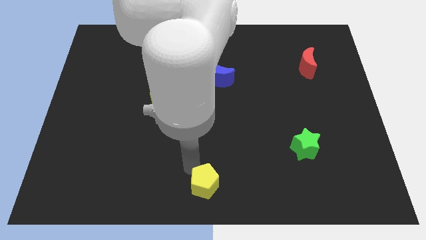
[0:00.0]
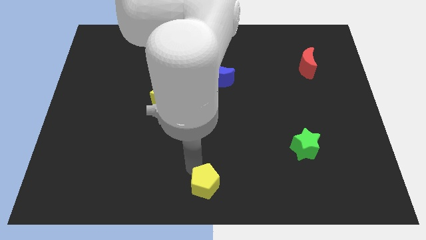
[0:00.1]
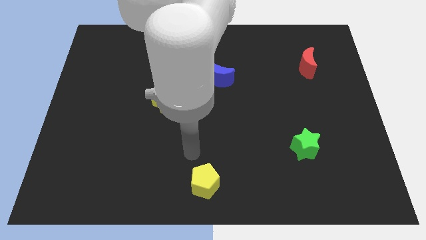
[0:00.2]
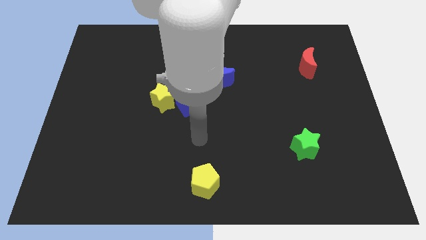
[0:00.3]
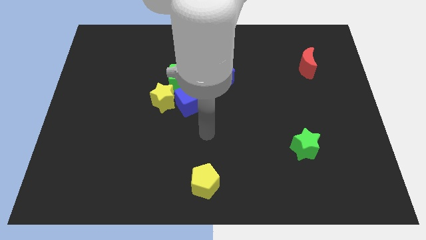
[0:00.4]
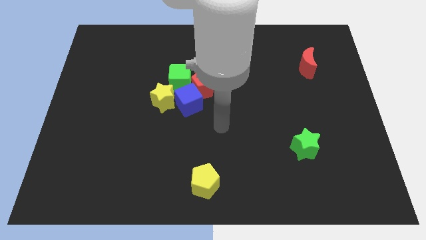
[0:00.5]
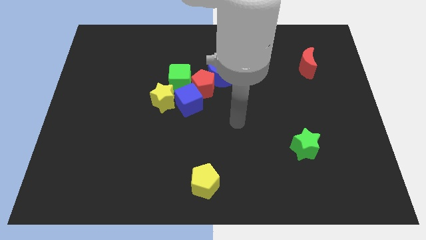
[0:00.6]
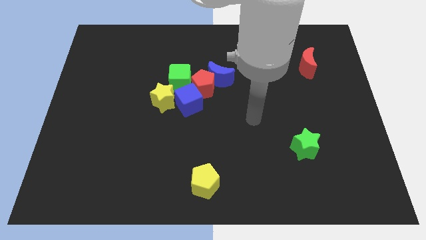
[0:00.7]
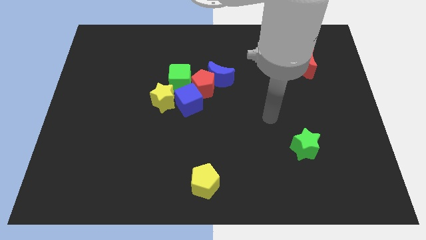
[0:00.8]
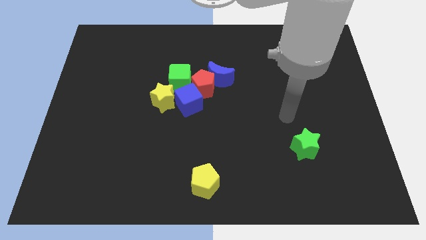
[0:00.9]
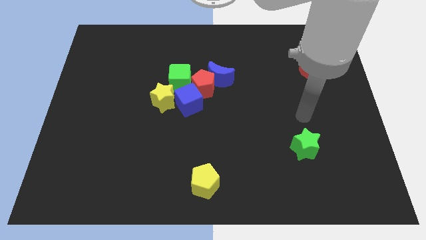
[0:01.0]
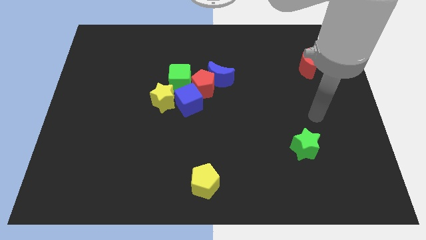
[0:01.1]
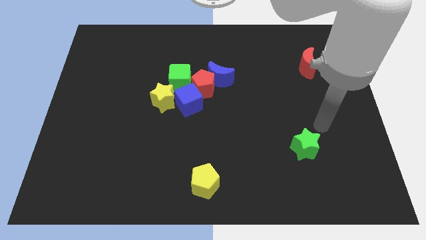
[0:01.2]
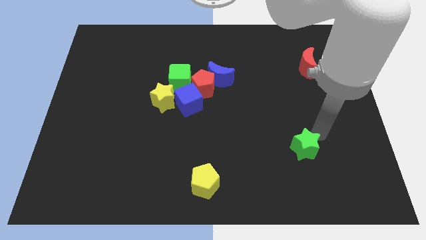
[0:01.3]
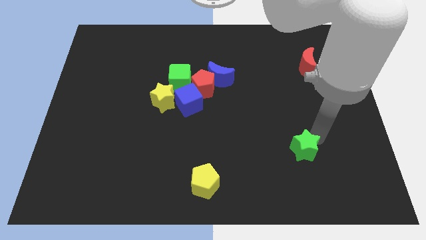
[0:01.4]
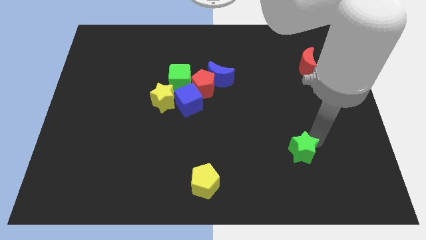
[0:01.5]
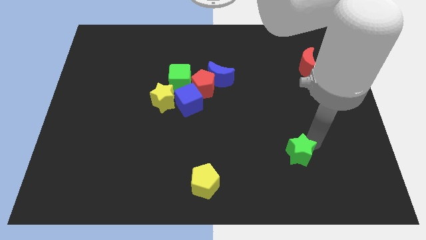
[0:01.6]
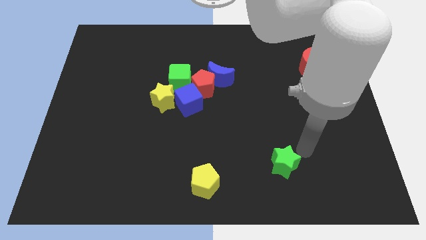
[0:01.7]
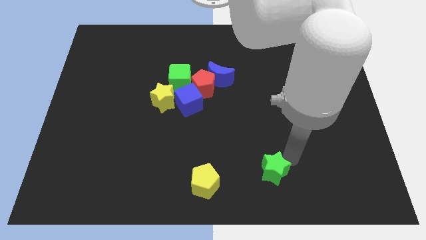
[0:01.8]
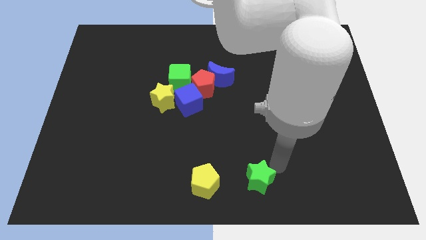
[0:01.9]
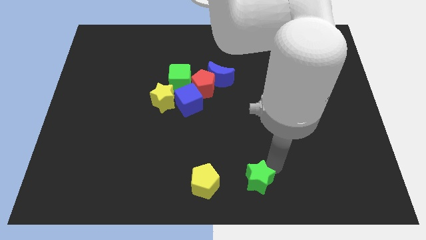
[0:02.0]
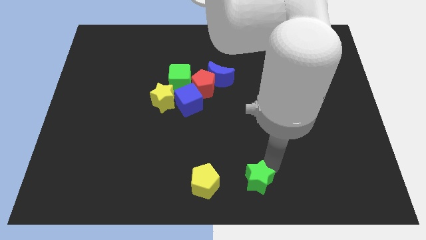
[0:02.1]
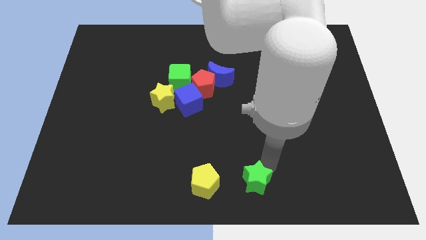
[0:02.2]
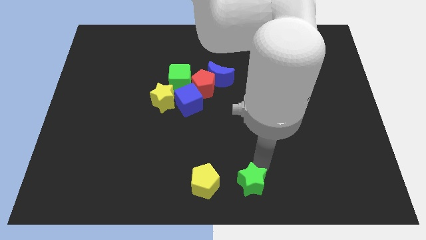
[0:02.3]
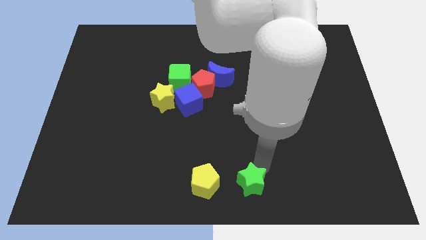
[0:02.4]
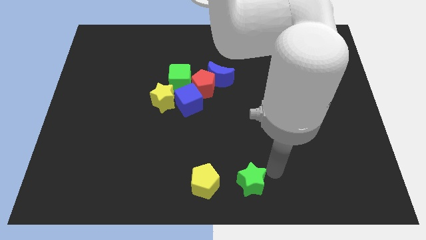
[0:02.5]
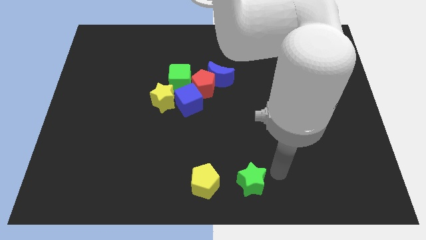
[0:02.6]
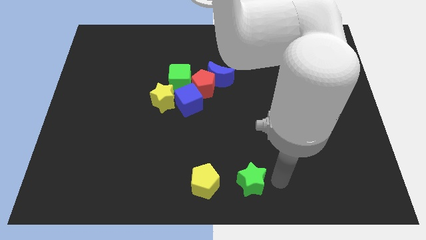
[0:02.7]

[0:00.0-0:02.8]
place the green star right side of the yellow pentagon

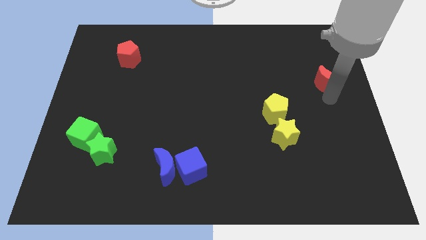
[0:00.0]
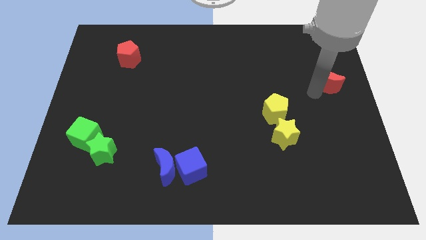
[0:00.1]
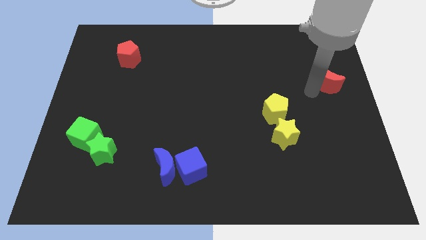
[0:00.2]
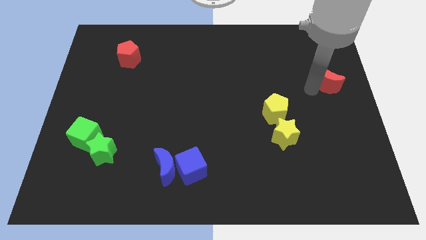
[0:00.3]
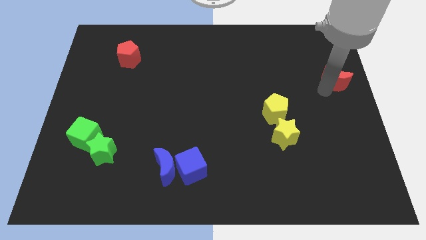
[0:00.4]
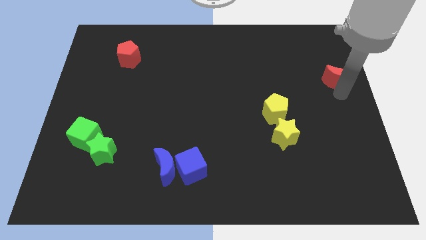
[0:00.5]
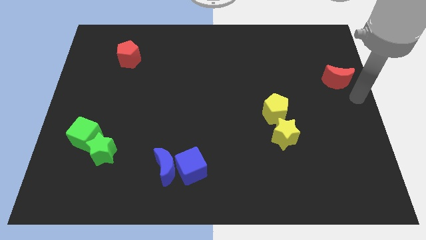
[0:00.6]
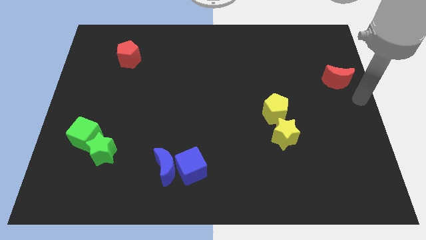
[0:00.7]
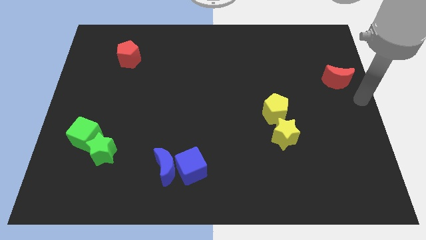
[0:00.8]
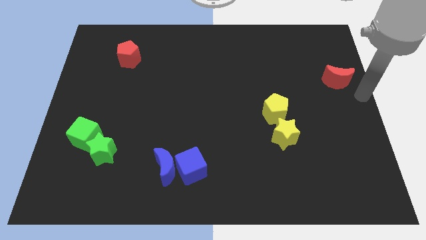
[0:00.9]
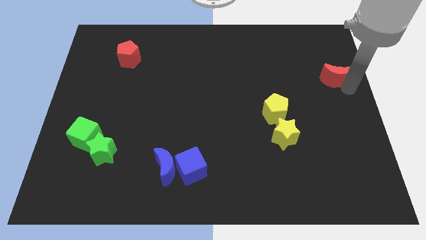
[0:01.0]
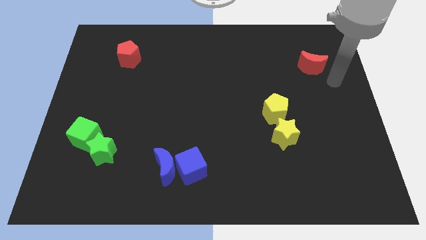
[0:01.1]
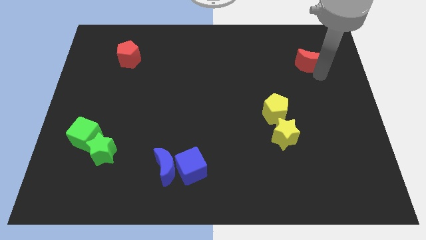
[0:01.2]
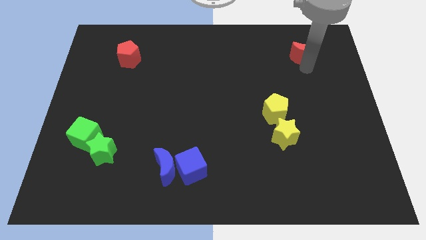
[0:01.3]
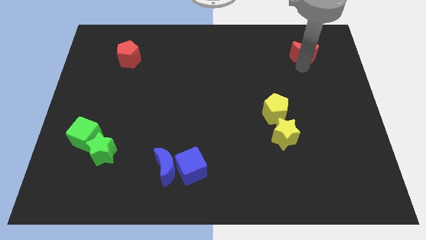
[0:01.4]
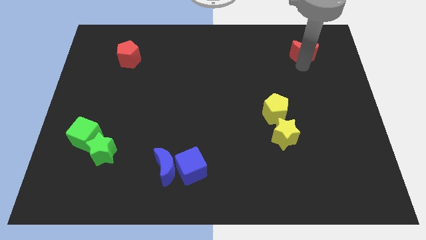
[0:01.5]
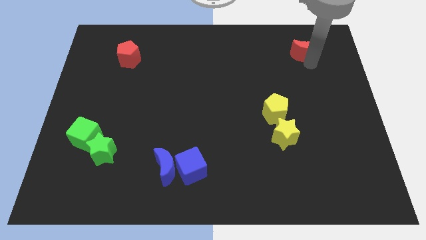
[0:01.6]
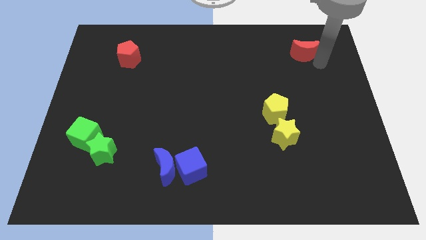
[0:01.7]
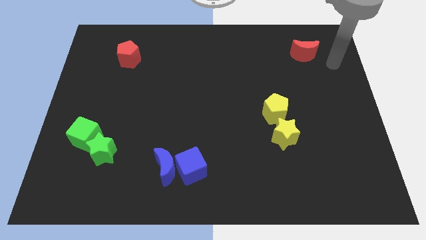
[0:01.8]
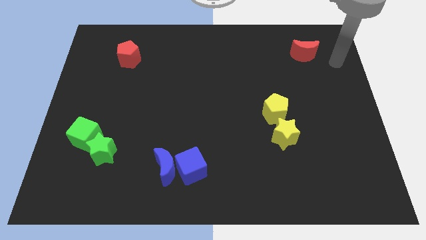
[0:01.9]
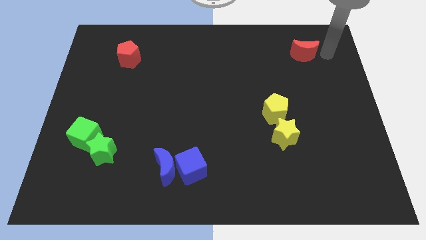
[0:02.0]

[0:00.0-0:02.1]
push red moon slightly upwards

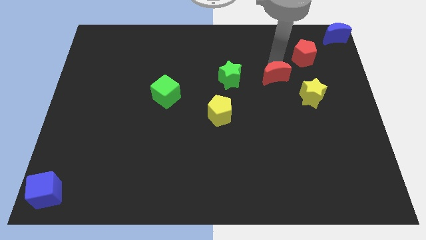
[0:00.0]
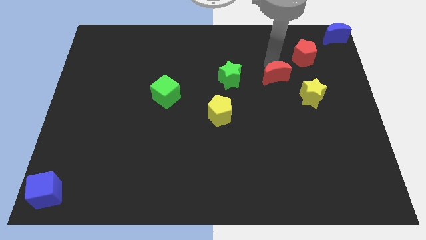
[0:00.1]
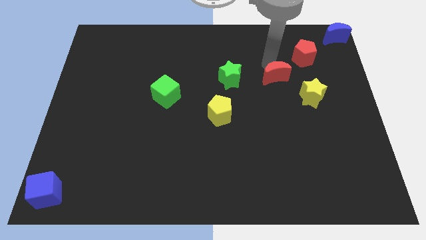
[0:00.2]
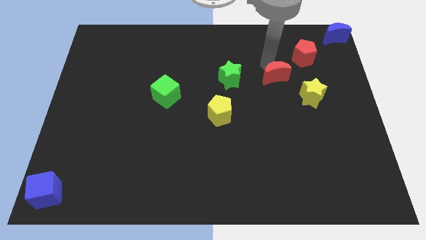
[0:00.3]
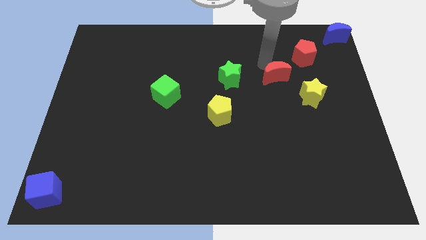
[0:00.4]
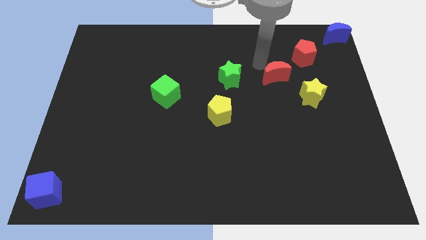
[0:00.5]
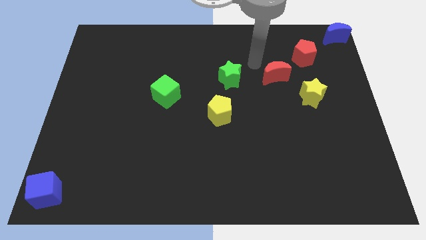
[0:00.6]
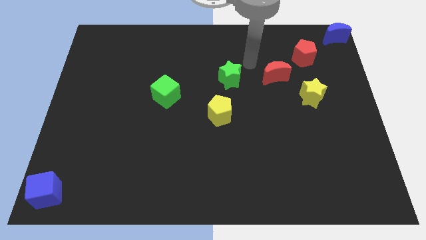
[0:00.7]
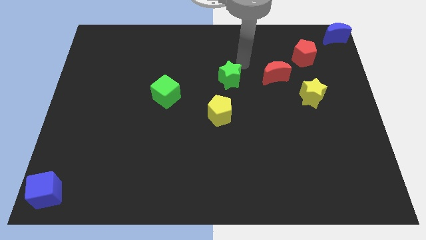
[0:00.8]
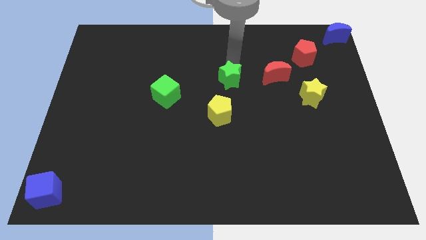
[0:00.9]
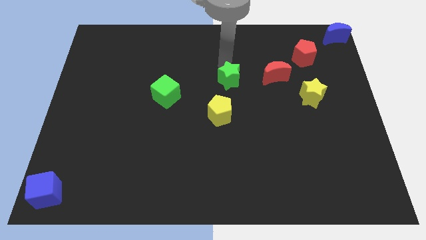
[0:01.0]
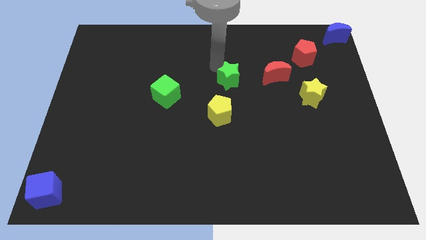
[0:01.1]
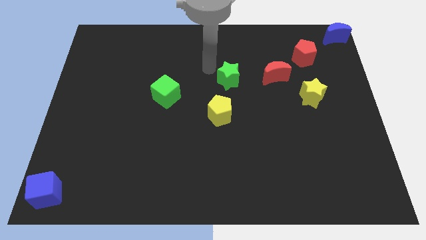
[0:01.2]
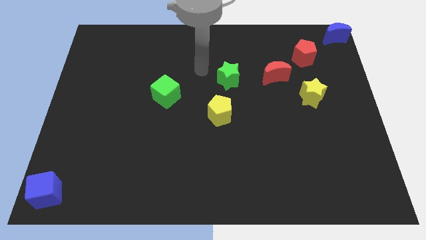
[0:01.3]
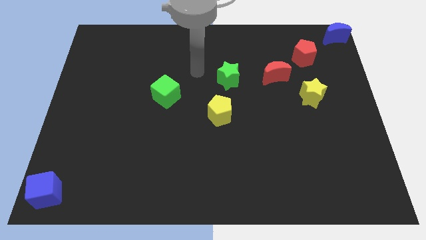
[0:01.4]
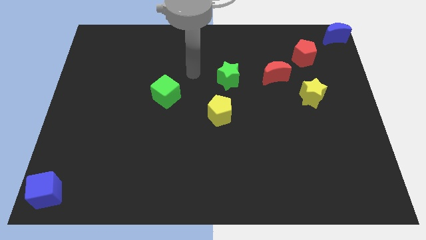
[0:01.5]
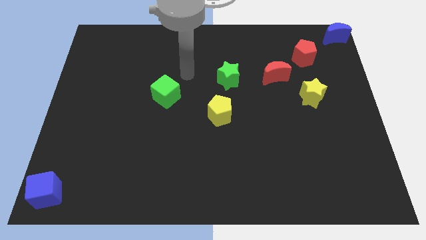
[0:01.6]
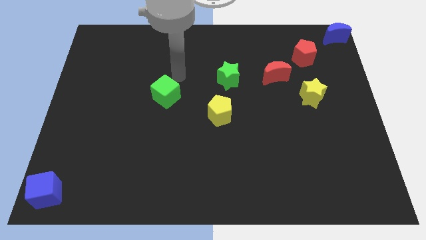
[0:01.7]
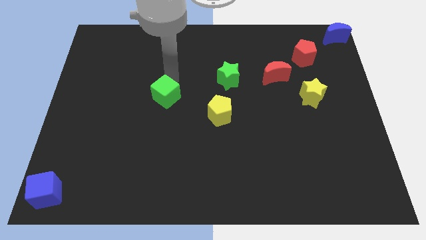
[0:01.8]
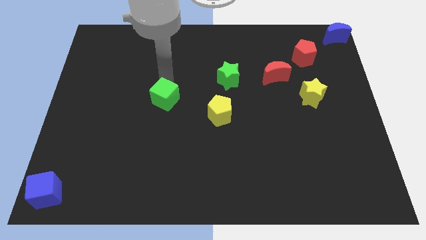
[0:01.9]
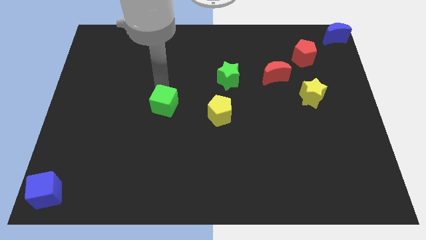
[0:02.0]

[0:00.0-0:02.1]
slightly move green cube towards the green star

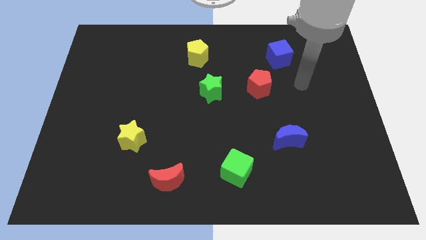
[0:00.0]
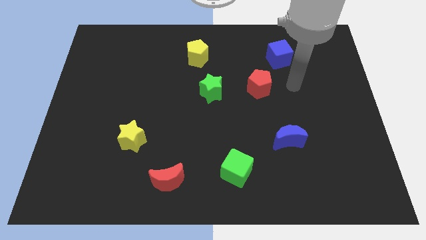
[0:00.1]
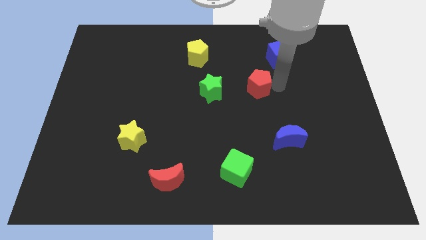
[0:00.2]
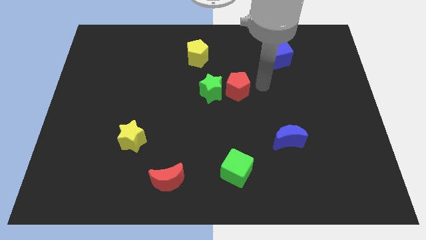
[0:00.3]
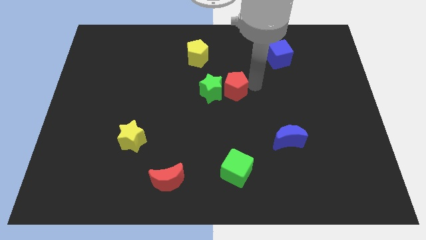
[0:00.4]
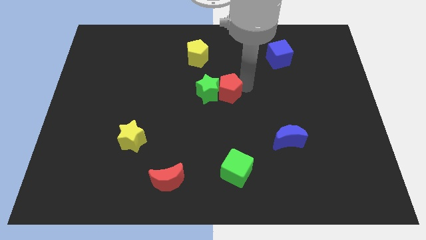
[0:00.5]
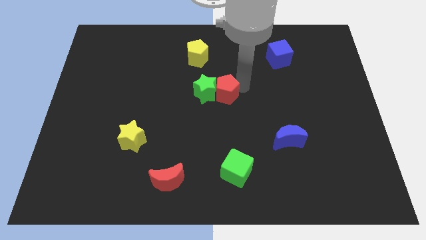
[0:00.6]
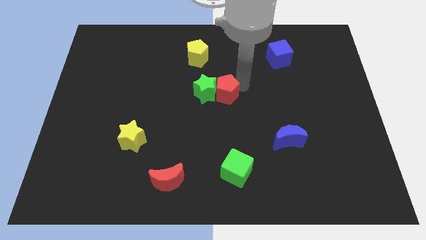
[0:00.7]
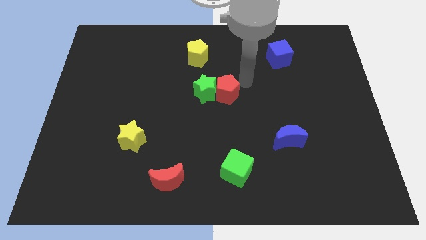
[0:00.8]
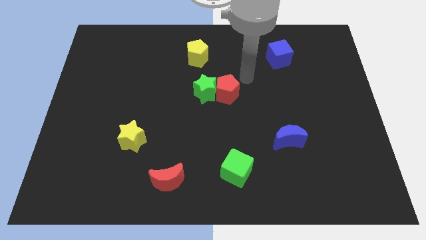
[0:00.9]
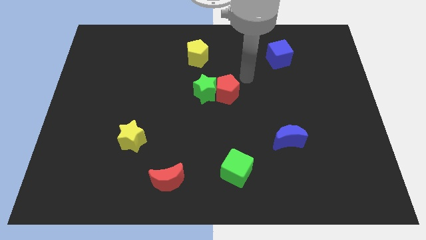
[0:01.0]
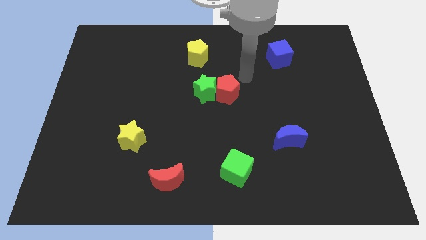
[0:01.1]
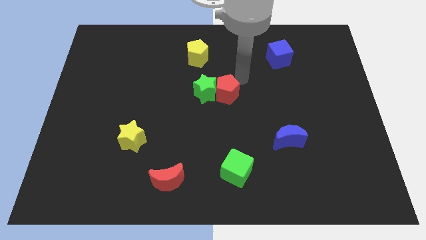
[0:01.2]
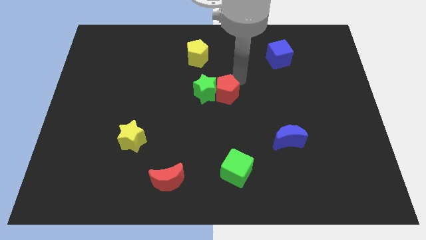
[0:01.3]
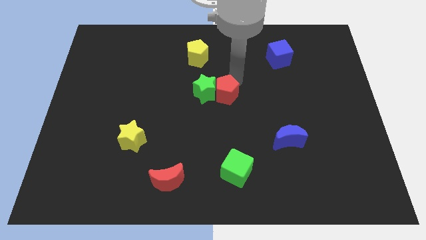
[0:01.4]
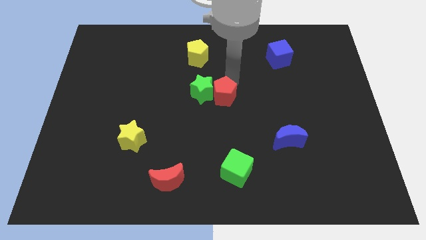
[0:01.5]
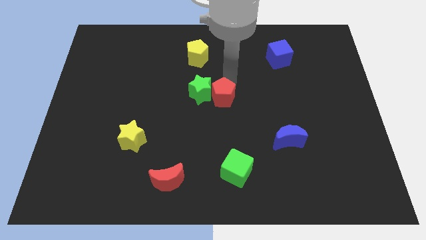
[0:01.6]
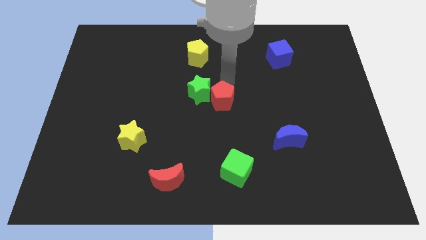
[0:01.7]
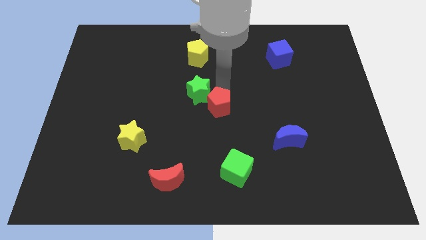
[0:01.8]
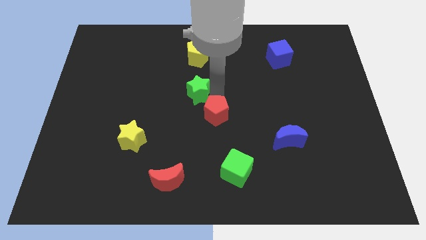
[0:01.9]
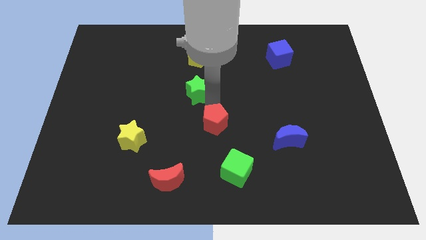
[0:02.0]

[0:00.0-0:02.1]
place the red pentagon at the center
